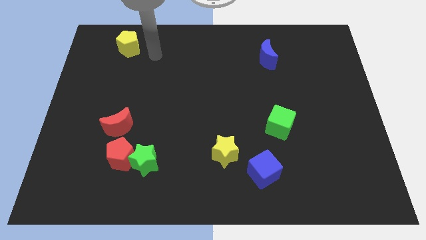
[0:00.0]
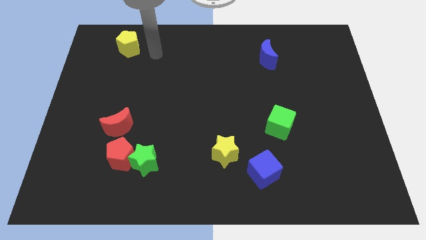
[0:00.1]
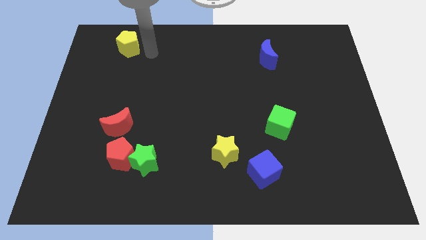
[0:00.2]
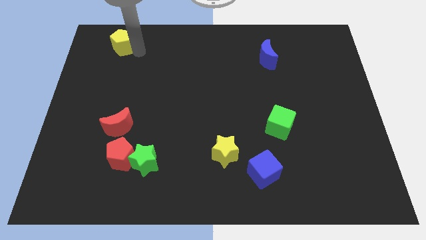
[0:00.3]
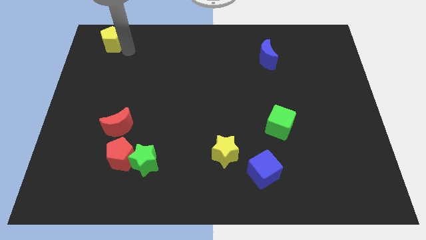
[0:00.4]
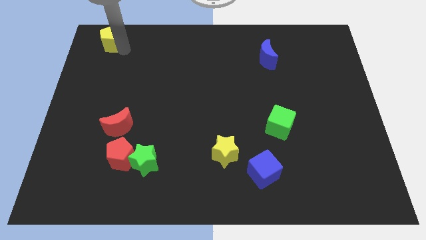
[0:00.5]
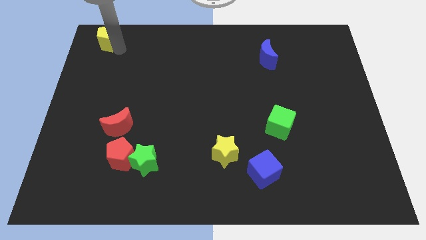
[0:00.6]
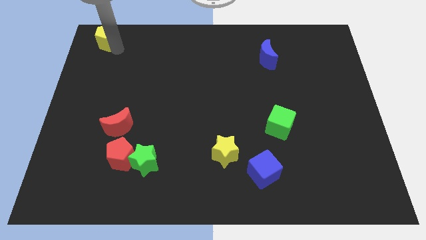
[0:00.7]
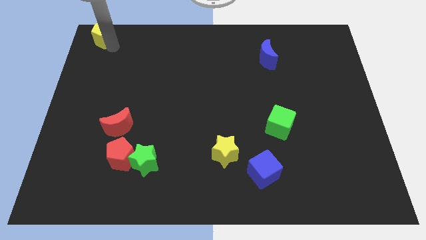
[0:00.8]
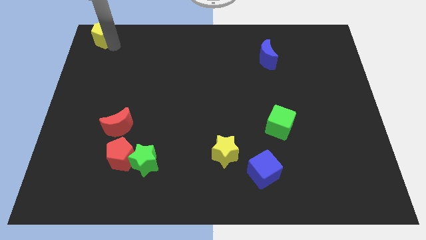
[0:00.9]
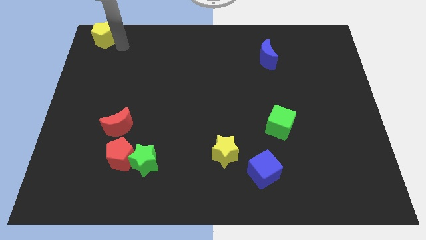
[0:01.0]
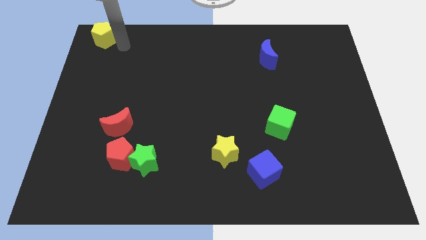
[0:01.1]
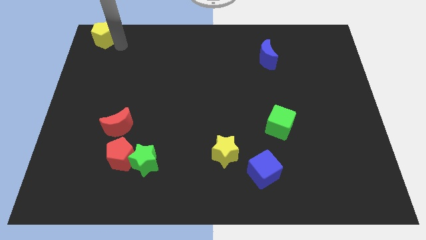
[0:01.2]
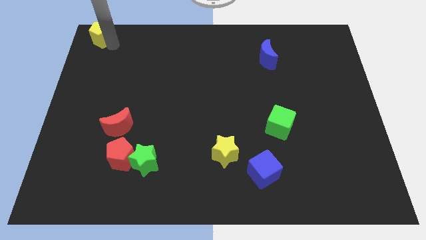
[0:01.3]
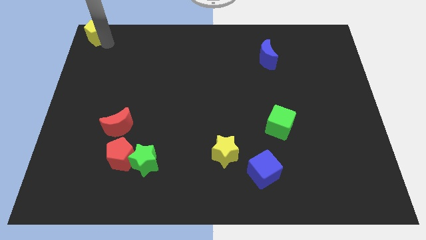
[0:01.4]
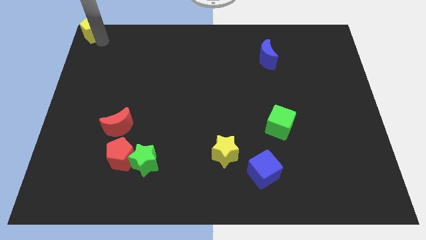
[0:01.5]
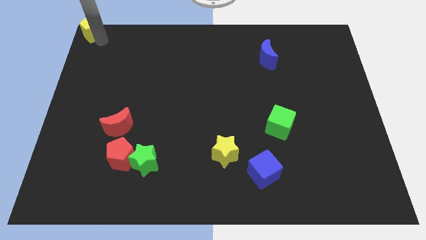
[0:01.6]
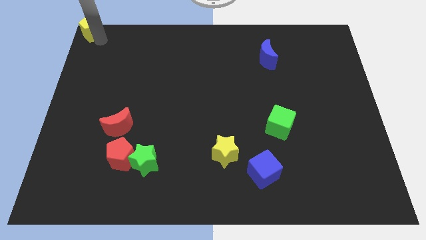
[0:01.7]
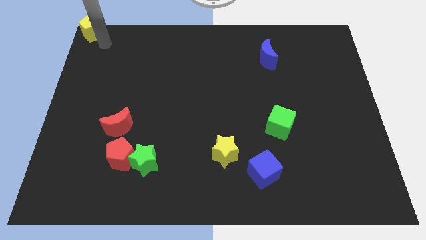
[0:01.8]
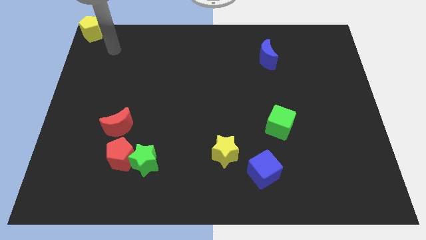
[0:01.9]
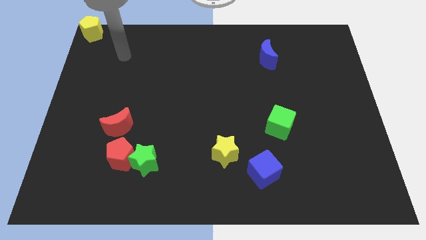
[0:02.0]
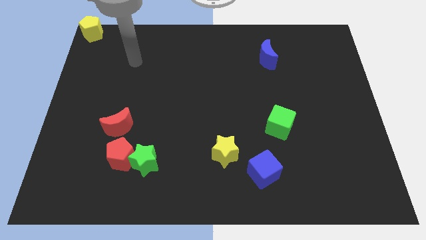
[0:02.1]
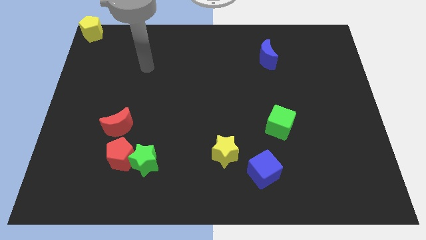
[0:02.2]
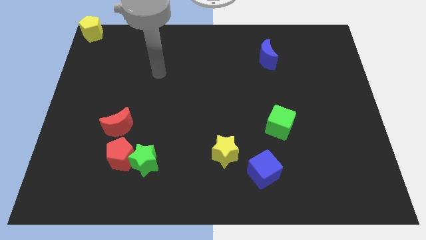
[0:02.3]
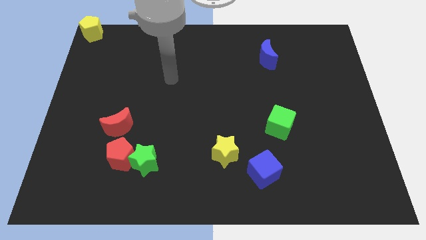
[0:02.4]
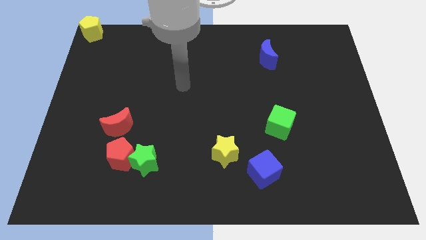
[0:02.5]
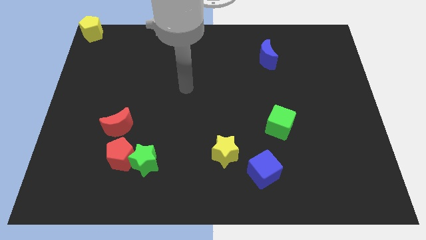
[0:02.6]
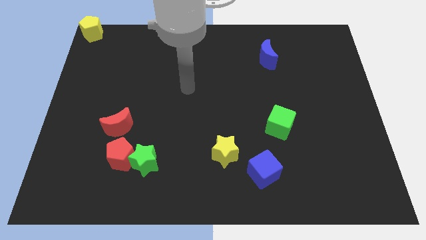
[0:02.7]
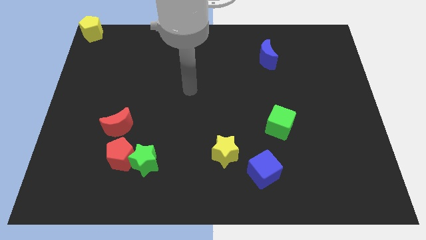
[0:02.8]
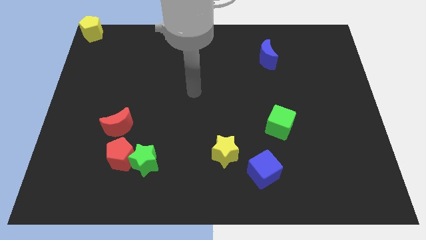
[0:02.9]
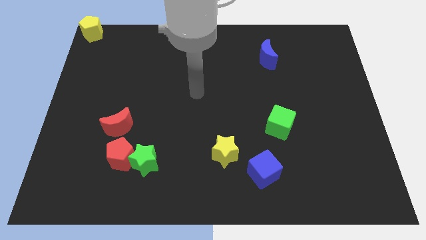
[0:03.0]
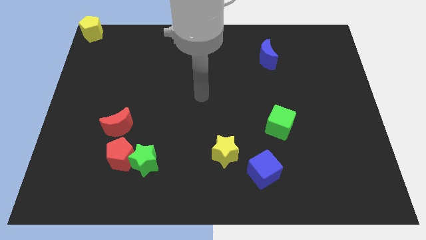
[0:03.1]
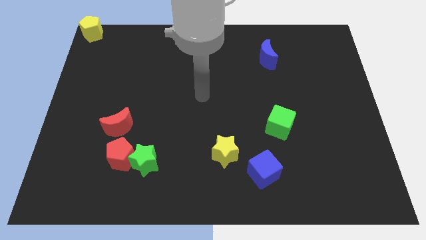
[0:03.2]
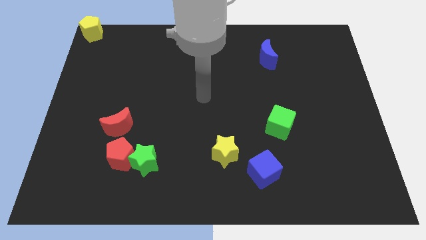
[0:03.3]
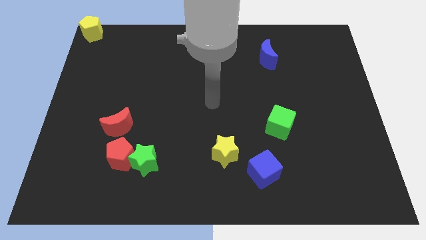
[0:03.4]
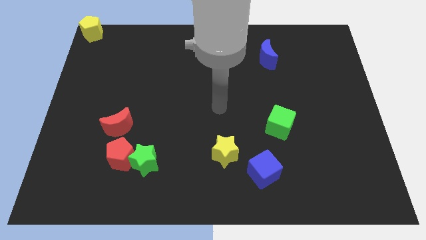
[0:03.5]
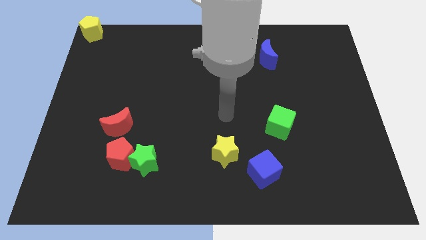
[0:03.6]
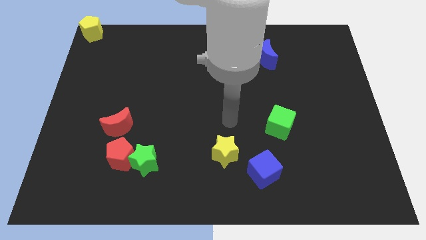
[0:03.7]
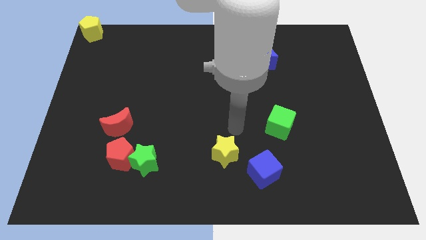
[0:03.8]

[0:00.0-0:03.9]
place the yellow pentagon at the top left corner

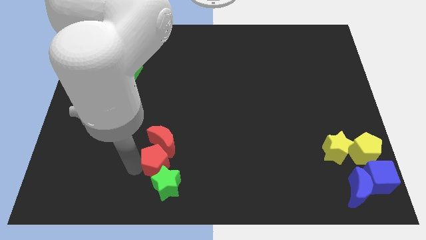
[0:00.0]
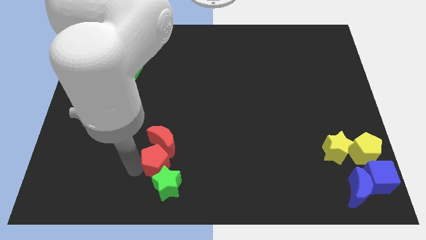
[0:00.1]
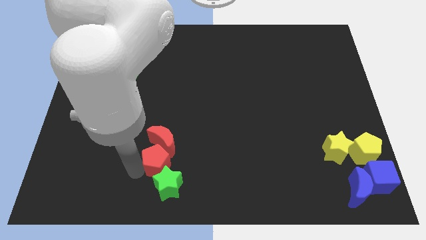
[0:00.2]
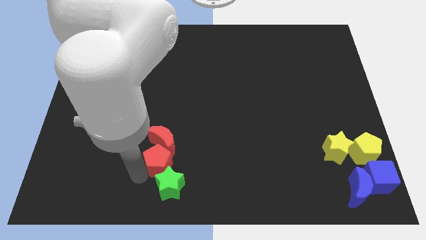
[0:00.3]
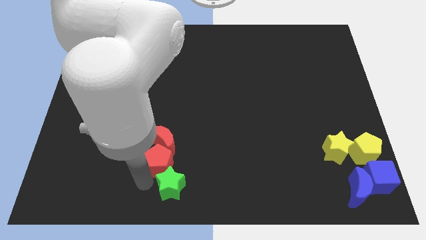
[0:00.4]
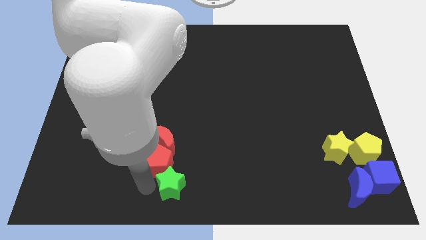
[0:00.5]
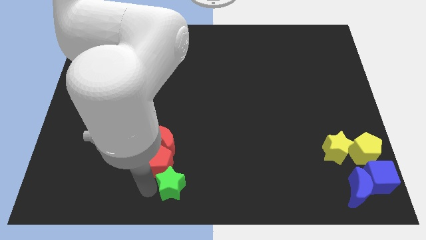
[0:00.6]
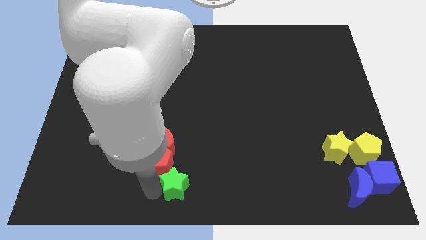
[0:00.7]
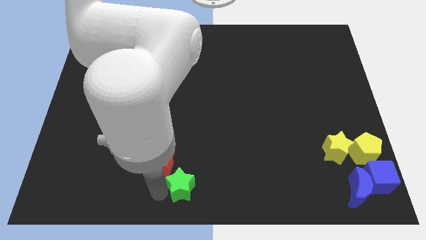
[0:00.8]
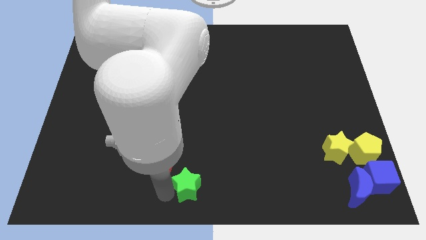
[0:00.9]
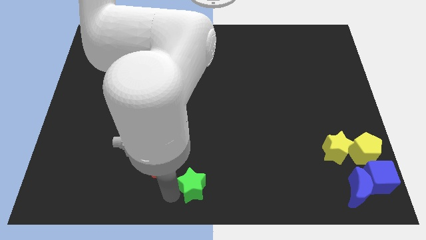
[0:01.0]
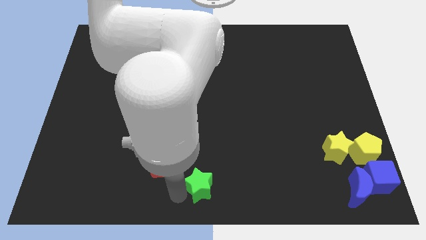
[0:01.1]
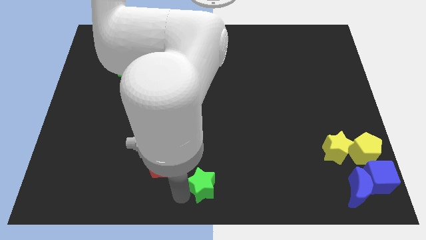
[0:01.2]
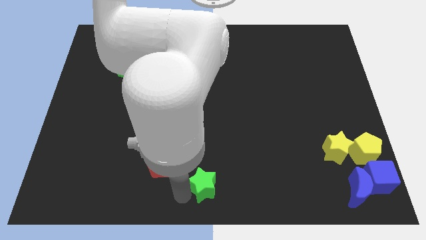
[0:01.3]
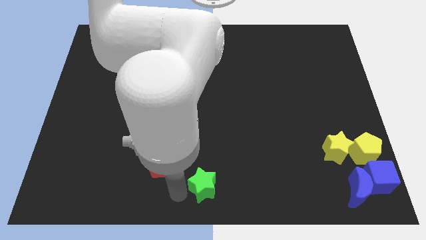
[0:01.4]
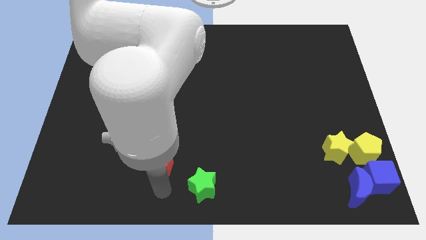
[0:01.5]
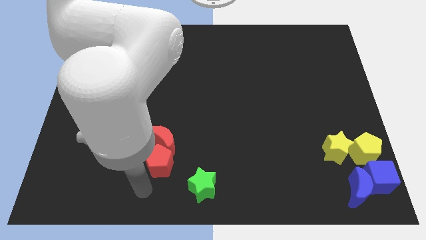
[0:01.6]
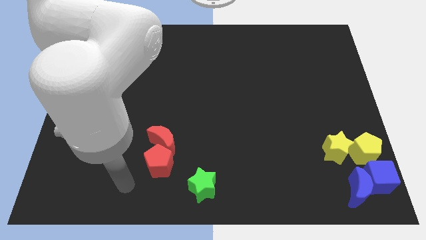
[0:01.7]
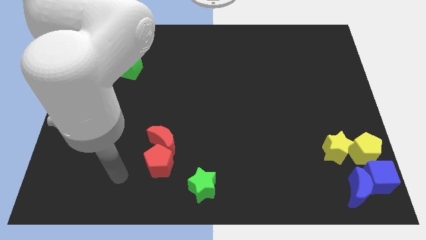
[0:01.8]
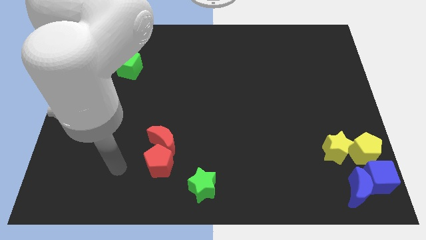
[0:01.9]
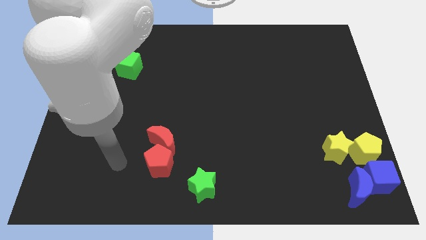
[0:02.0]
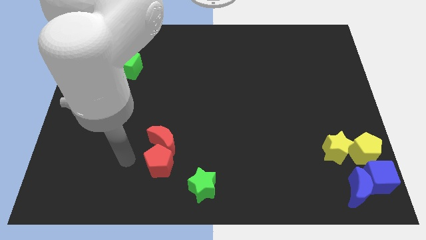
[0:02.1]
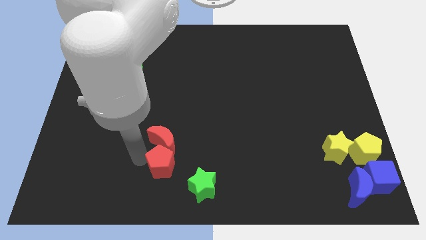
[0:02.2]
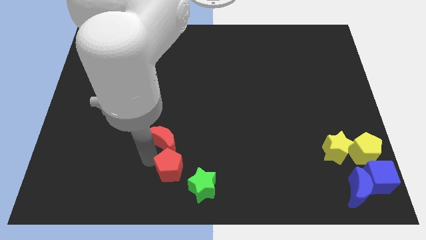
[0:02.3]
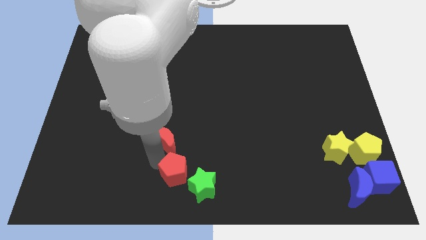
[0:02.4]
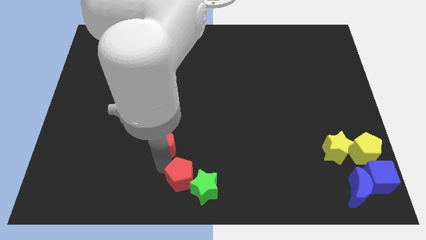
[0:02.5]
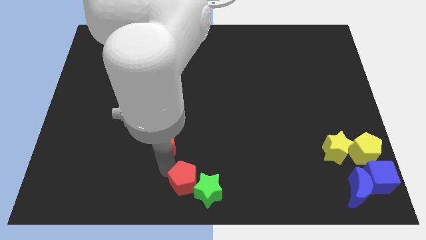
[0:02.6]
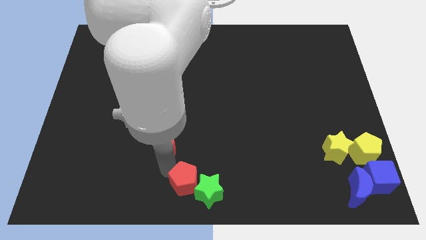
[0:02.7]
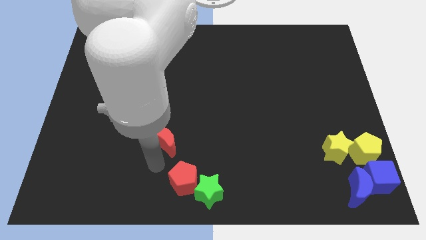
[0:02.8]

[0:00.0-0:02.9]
slightly push the green cube and the red pentagon to the right of the board

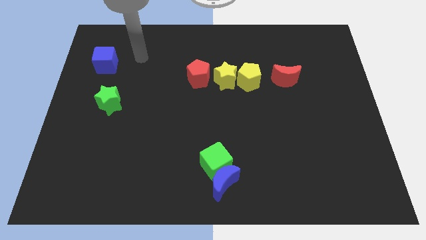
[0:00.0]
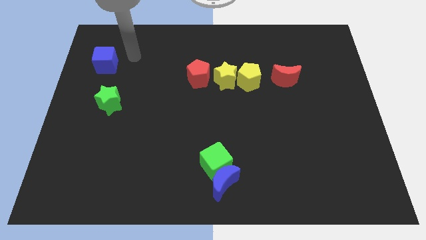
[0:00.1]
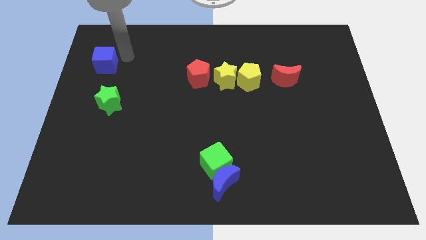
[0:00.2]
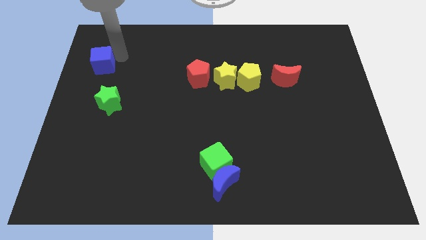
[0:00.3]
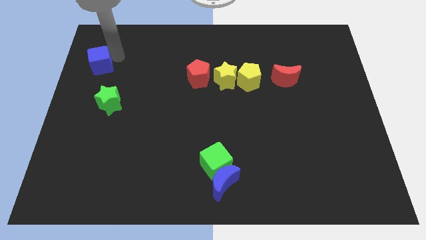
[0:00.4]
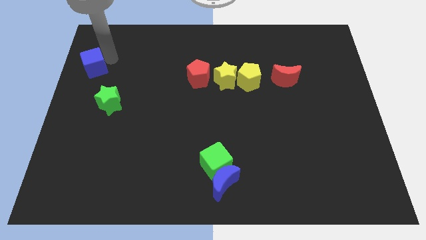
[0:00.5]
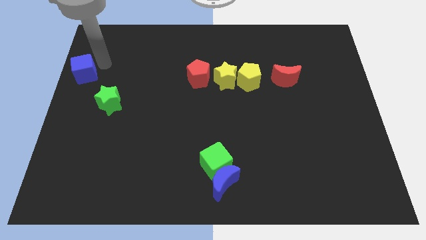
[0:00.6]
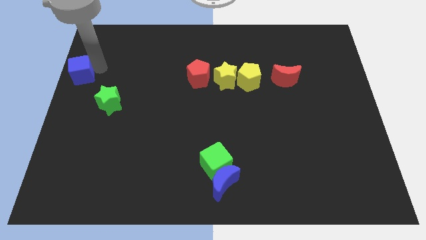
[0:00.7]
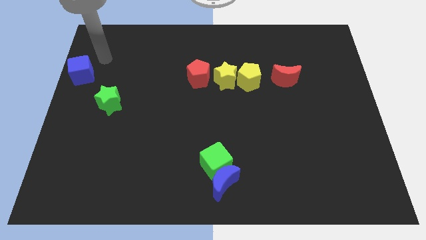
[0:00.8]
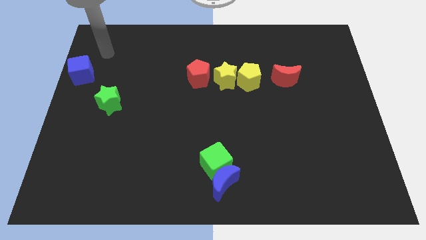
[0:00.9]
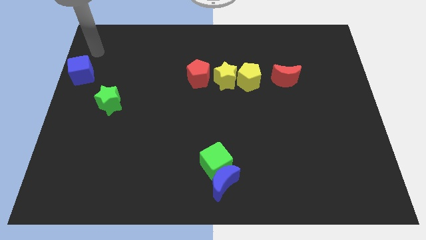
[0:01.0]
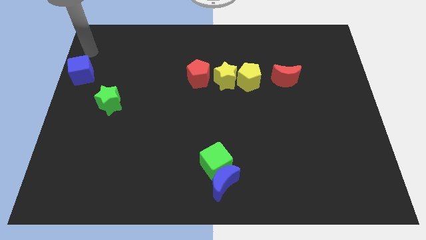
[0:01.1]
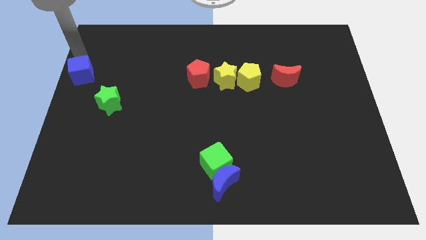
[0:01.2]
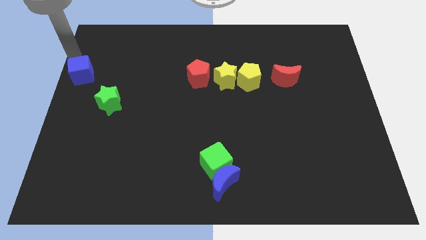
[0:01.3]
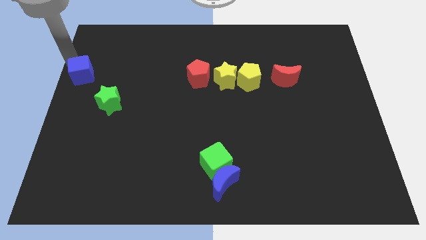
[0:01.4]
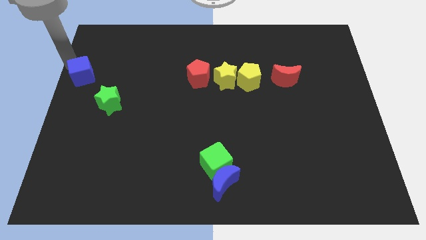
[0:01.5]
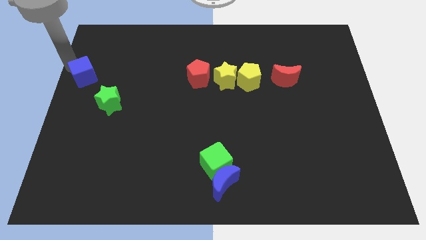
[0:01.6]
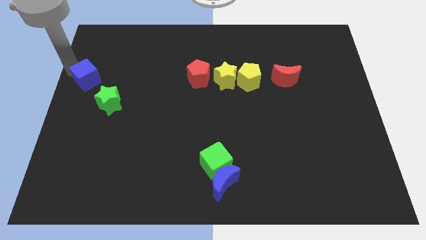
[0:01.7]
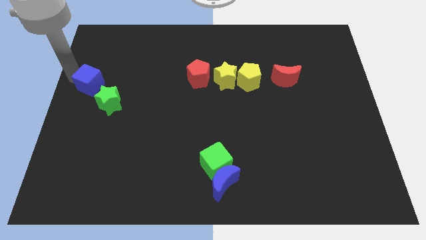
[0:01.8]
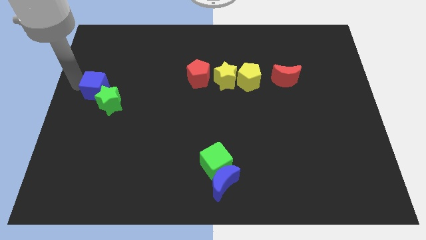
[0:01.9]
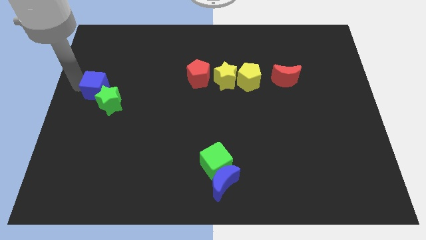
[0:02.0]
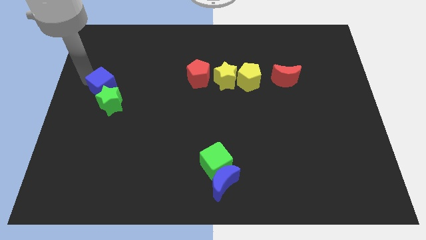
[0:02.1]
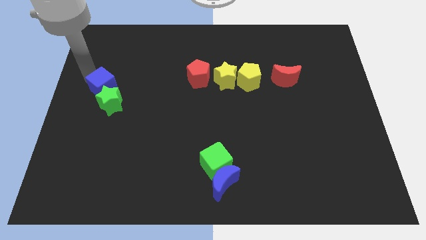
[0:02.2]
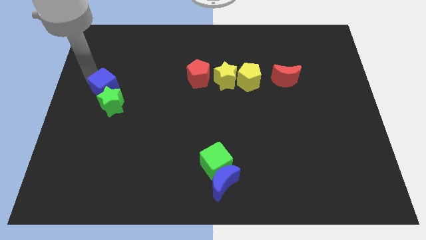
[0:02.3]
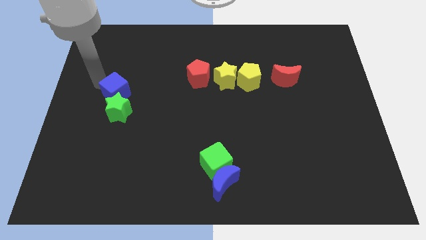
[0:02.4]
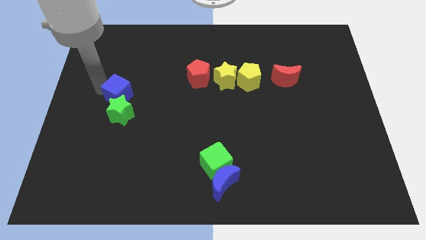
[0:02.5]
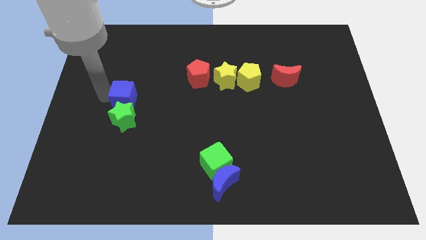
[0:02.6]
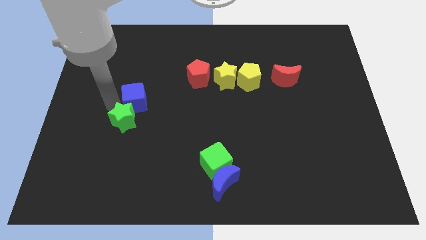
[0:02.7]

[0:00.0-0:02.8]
push blue cube in to green star
